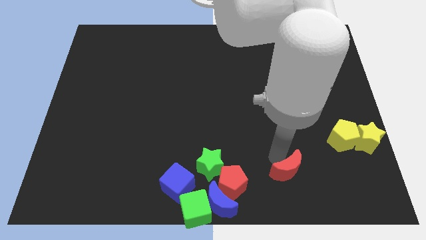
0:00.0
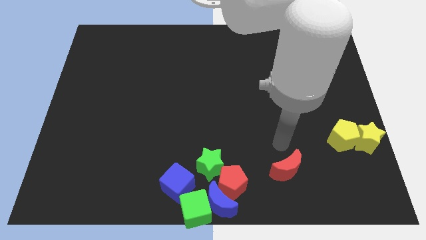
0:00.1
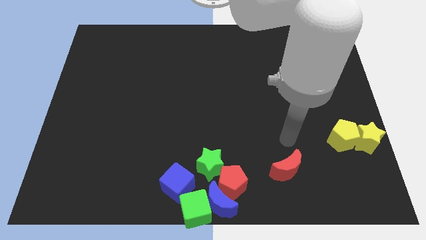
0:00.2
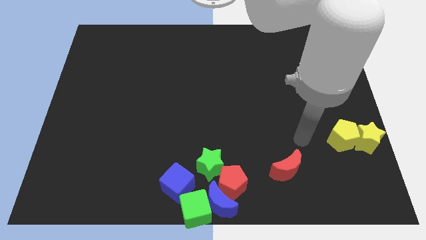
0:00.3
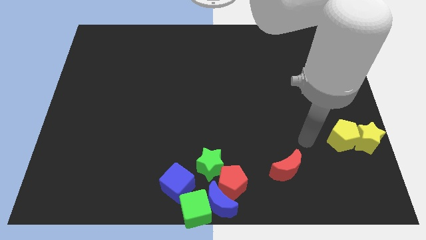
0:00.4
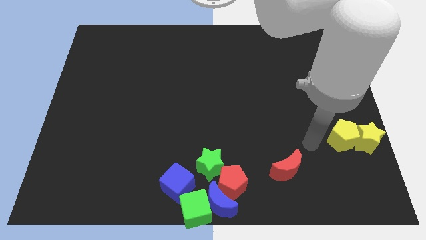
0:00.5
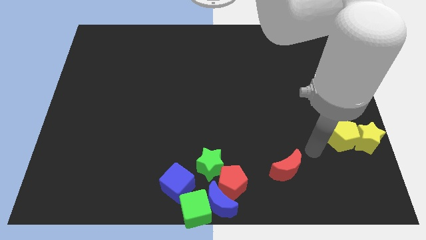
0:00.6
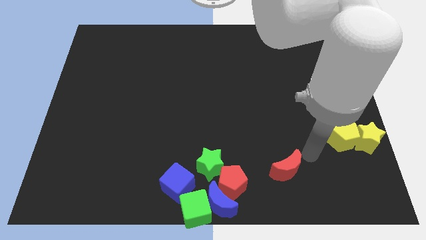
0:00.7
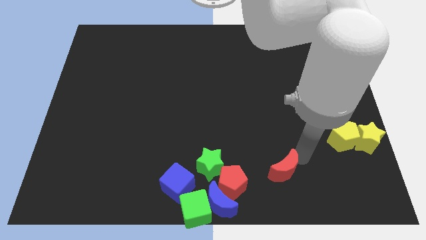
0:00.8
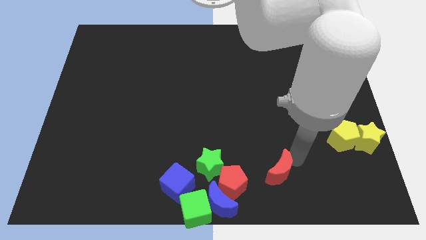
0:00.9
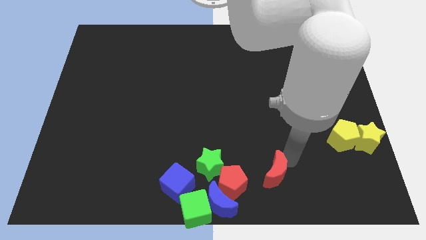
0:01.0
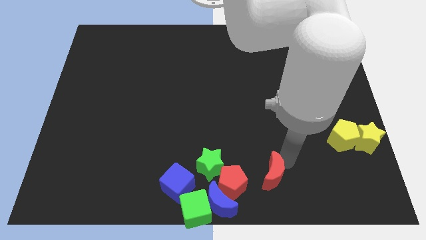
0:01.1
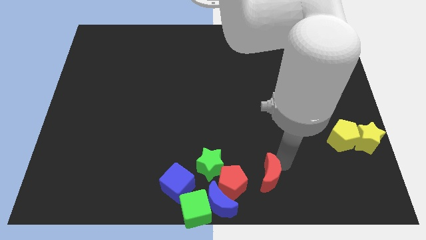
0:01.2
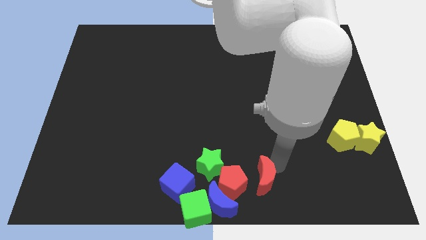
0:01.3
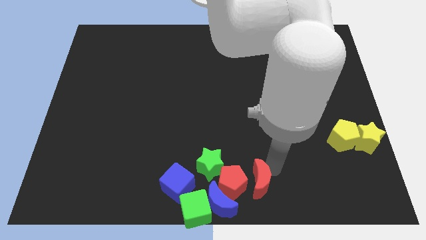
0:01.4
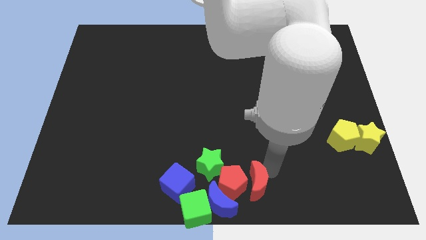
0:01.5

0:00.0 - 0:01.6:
move the red crescent close to the red pentagon

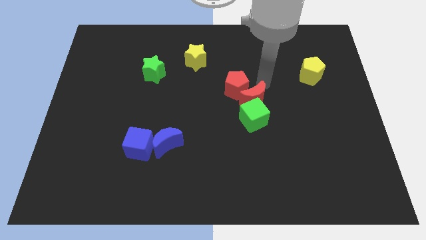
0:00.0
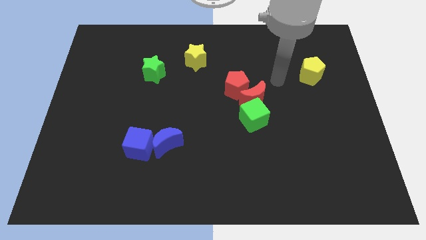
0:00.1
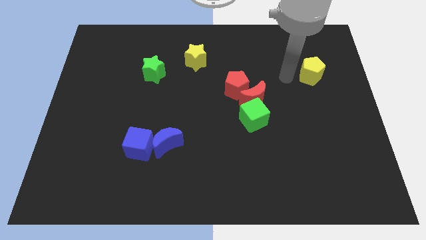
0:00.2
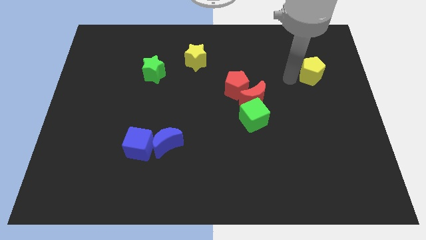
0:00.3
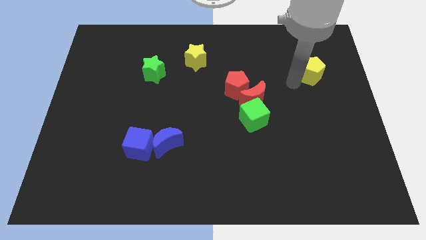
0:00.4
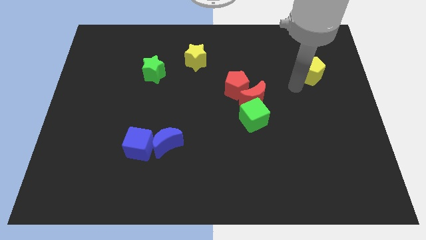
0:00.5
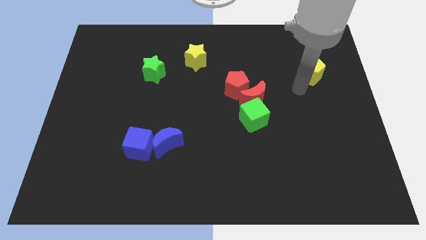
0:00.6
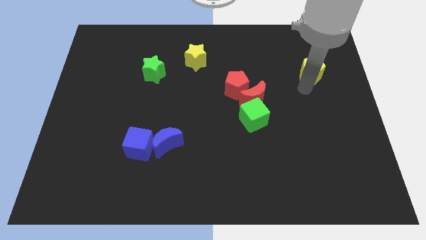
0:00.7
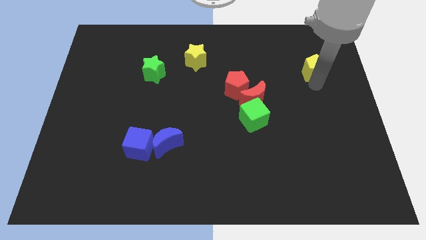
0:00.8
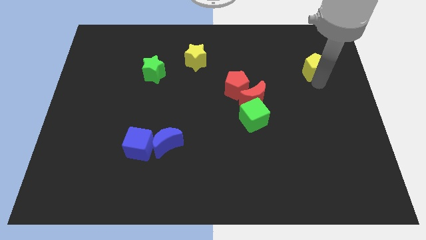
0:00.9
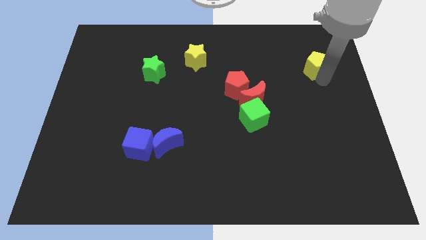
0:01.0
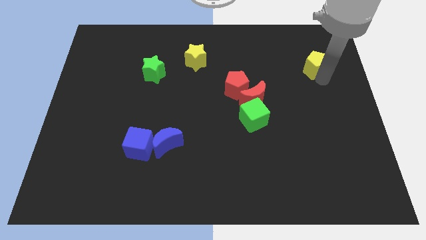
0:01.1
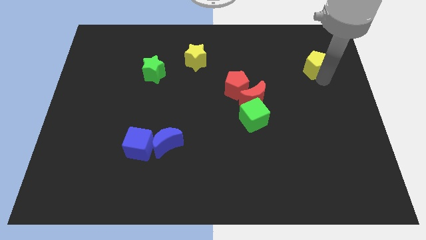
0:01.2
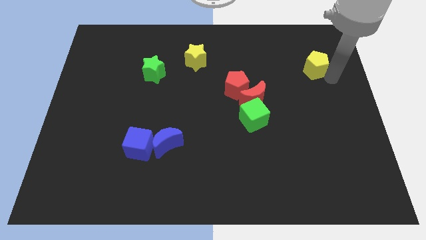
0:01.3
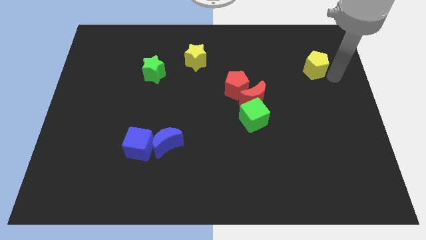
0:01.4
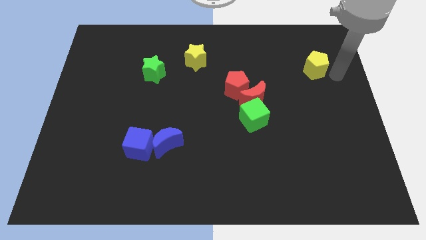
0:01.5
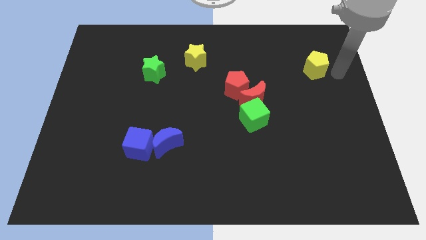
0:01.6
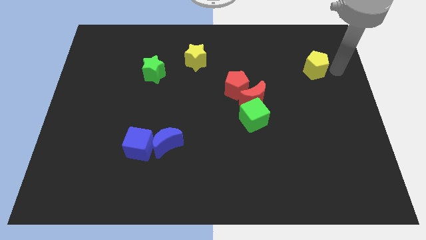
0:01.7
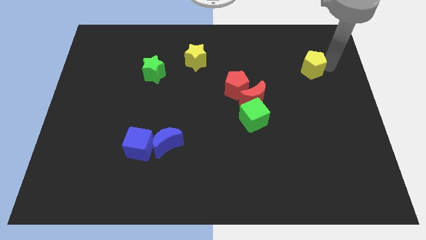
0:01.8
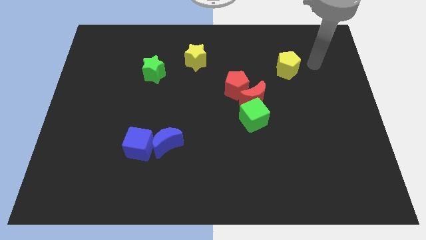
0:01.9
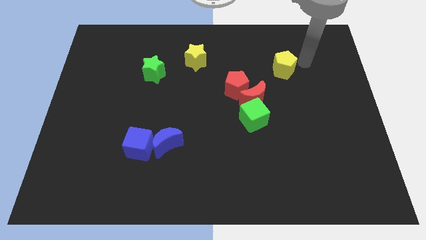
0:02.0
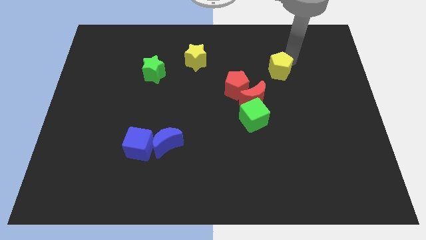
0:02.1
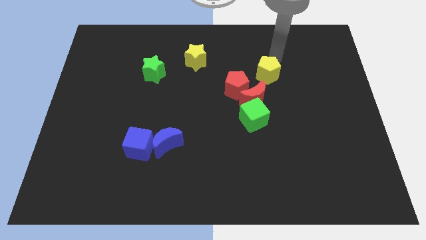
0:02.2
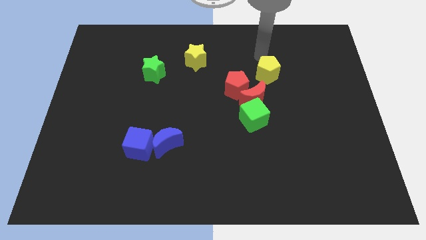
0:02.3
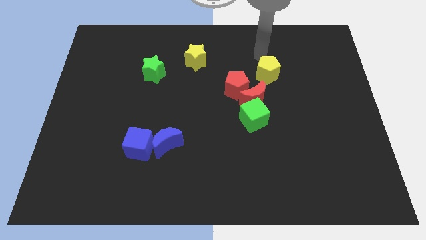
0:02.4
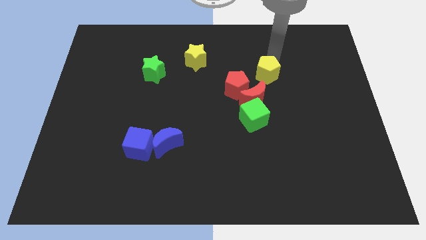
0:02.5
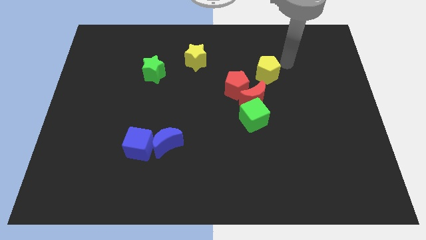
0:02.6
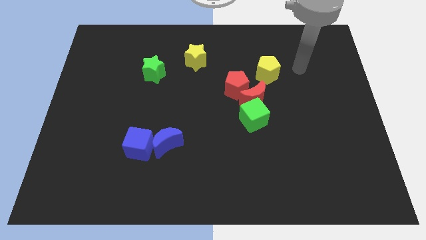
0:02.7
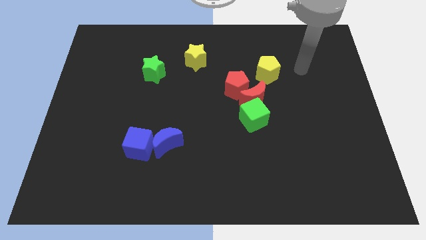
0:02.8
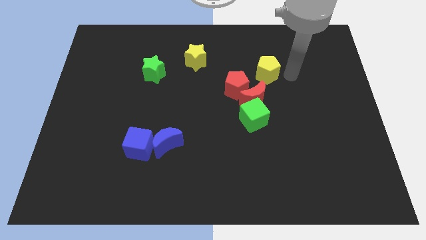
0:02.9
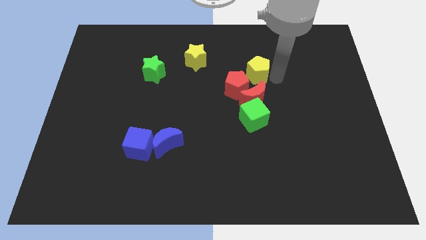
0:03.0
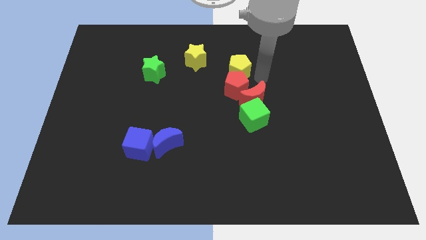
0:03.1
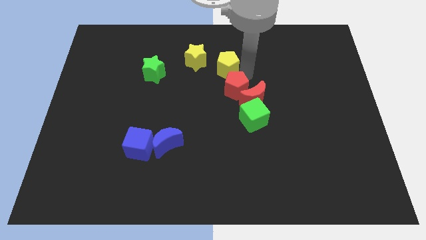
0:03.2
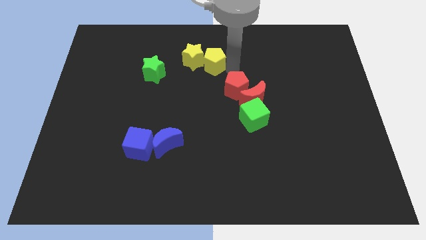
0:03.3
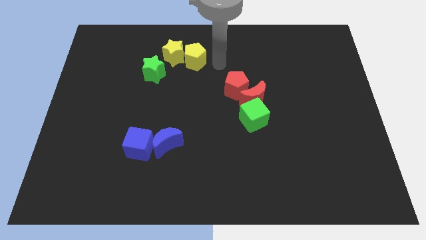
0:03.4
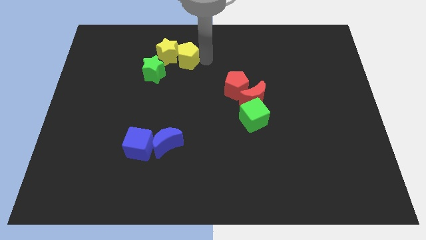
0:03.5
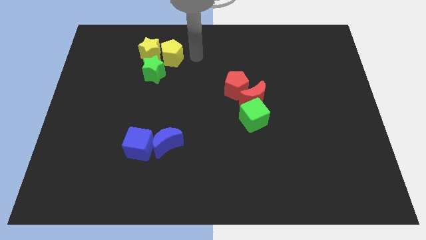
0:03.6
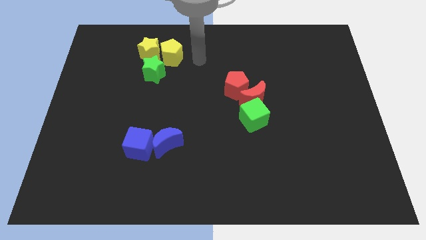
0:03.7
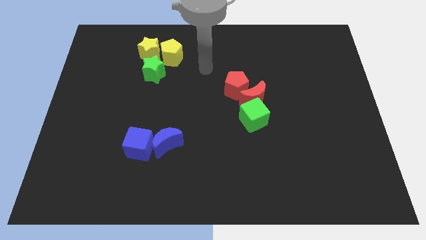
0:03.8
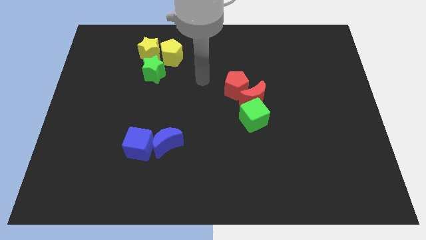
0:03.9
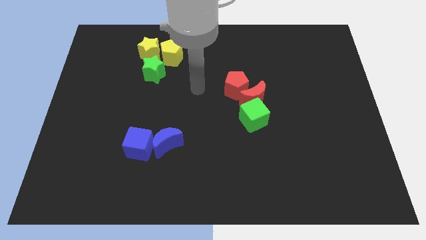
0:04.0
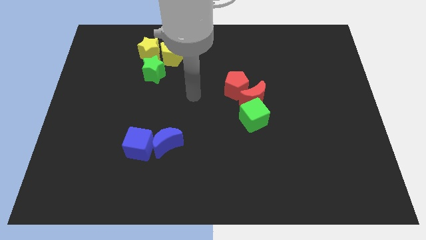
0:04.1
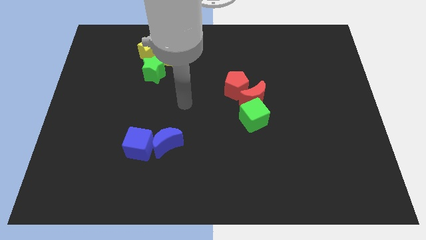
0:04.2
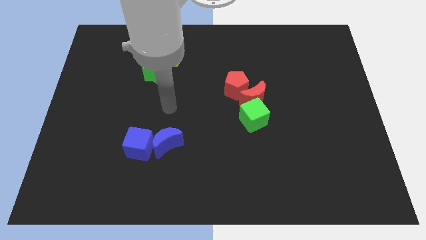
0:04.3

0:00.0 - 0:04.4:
push the yellow pentagon into the yellow star

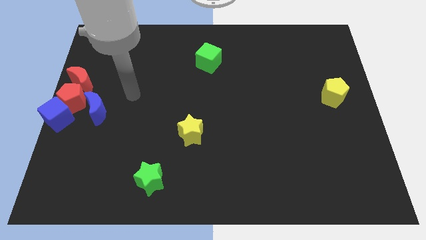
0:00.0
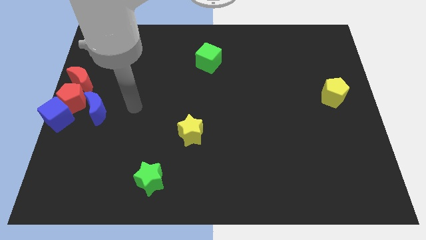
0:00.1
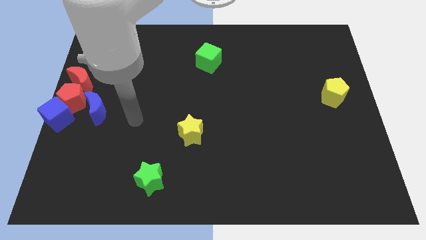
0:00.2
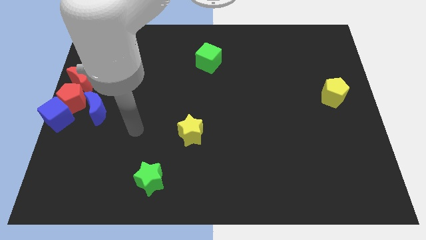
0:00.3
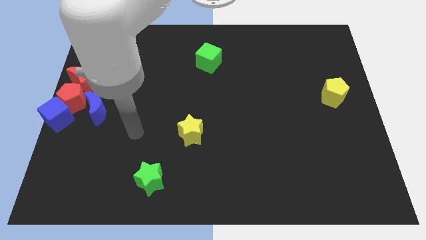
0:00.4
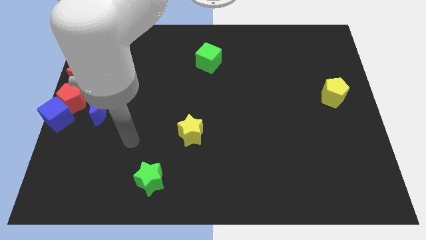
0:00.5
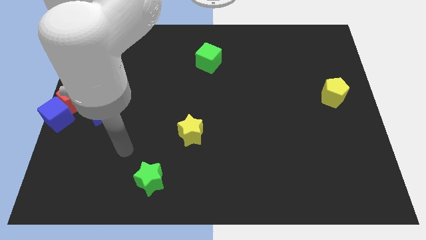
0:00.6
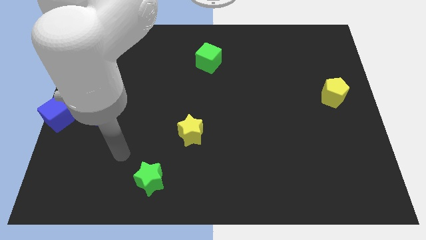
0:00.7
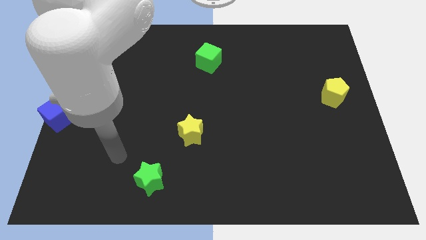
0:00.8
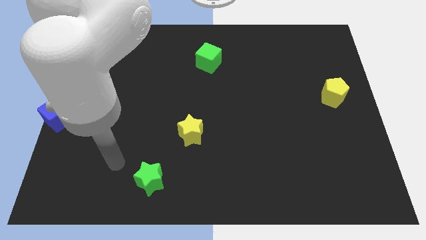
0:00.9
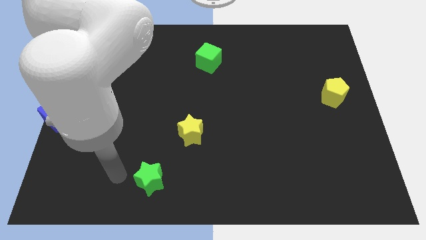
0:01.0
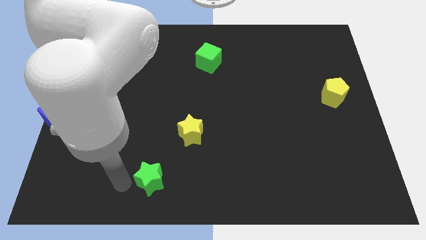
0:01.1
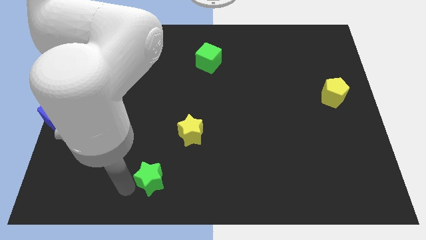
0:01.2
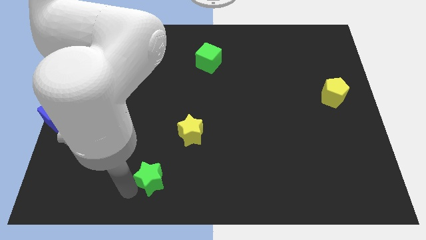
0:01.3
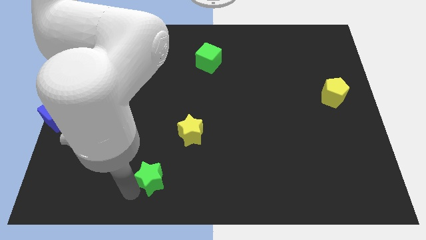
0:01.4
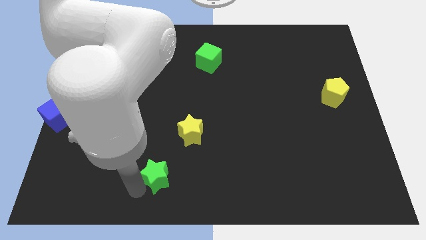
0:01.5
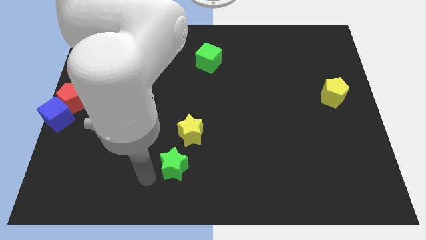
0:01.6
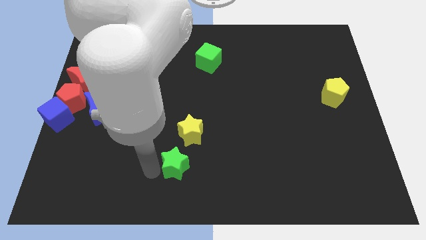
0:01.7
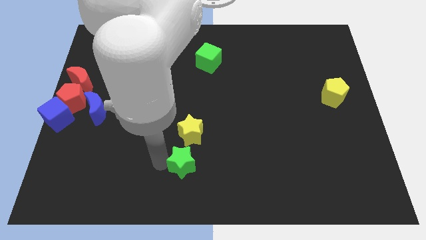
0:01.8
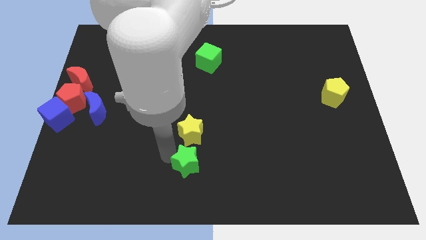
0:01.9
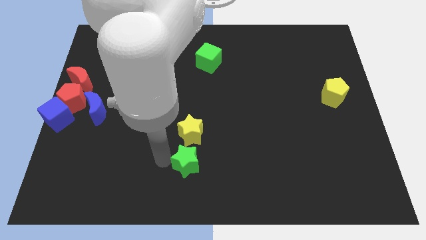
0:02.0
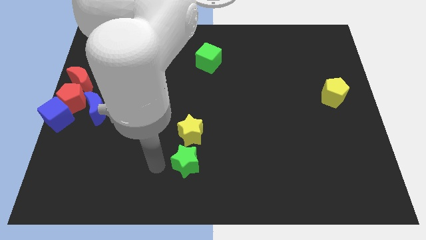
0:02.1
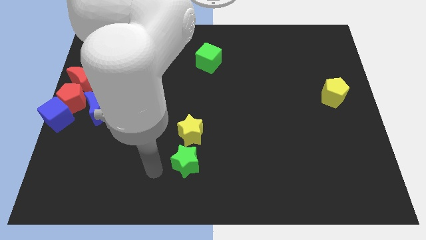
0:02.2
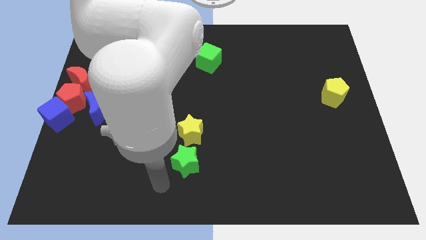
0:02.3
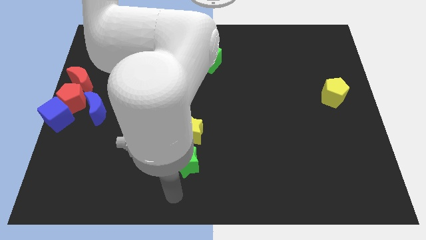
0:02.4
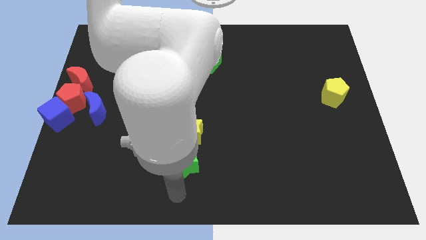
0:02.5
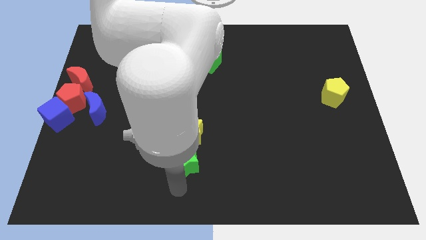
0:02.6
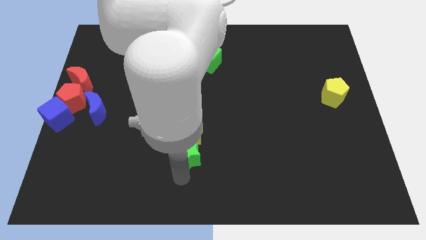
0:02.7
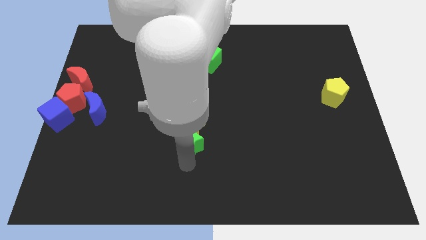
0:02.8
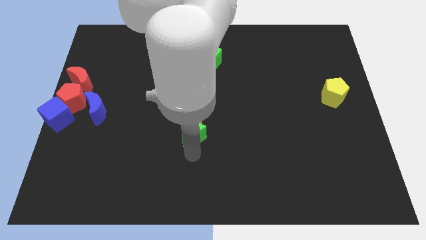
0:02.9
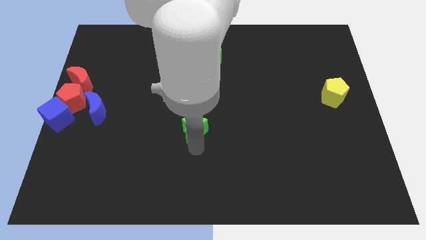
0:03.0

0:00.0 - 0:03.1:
slide green star into yellow star

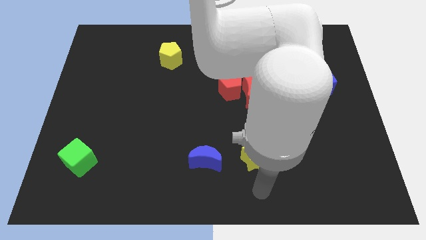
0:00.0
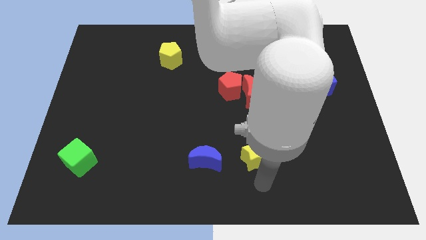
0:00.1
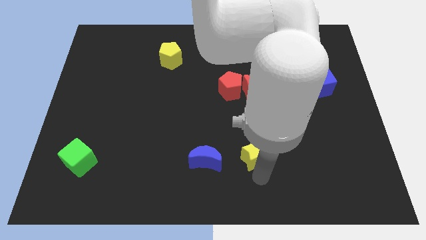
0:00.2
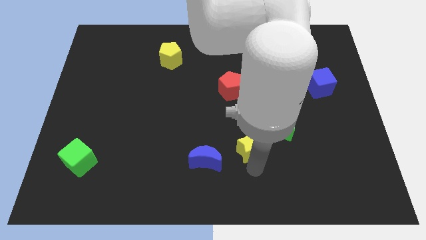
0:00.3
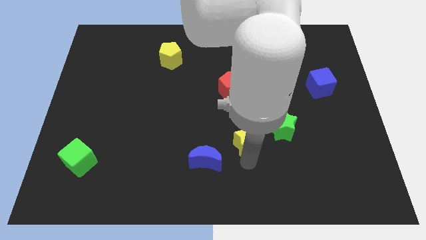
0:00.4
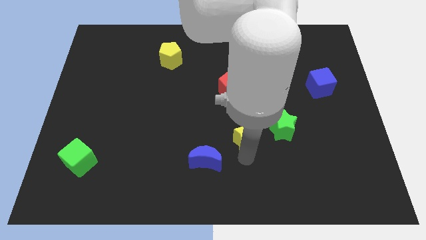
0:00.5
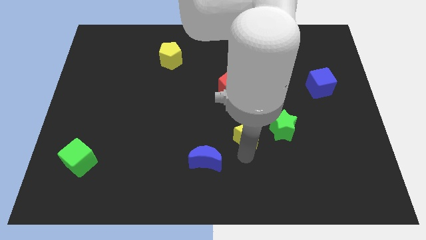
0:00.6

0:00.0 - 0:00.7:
push the yellow star up slightly
